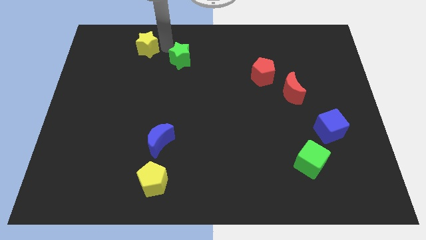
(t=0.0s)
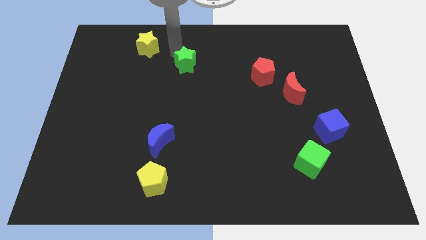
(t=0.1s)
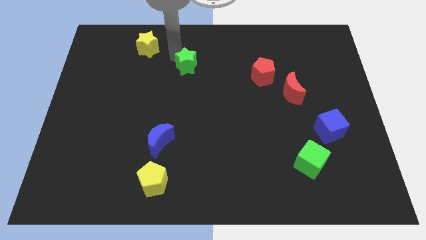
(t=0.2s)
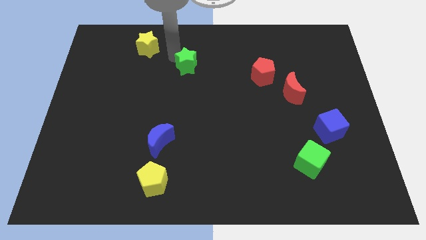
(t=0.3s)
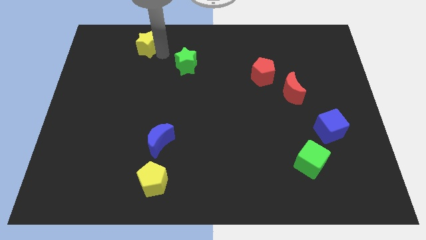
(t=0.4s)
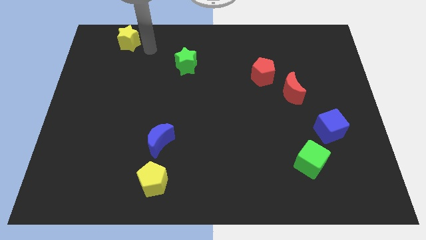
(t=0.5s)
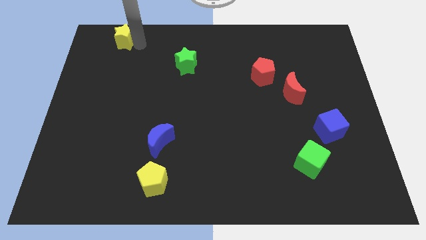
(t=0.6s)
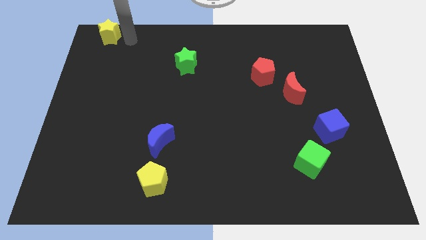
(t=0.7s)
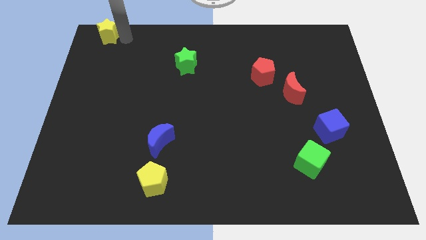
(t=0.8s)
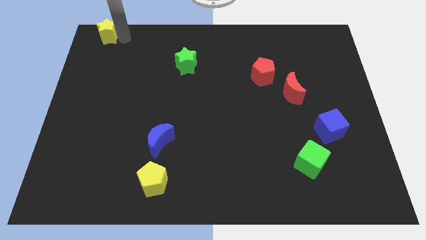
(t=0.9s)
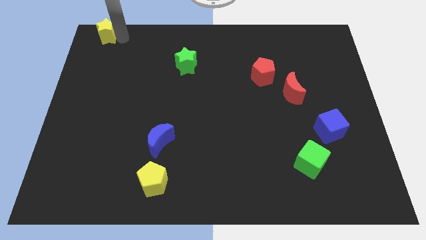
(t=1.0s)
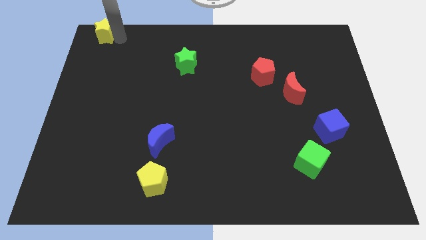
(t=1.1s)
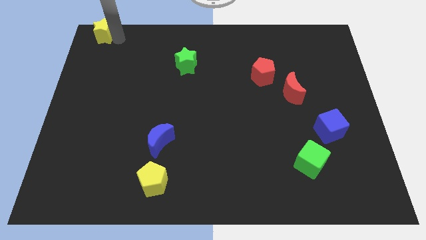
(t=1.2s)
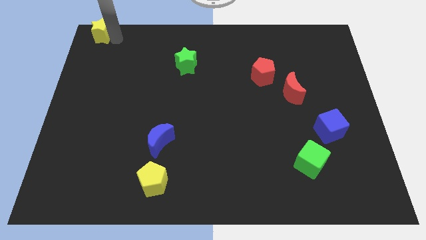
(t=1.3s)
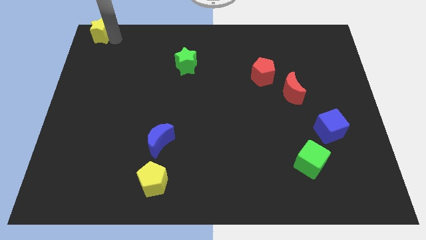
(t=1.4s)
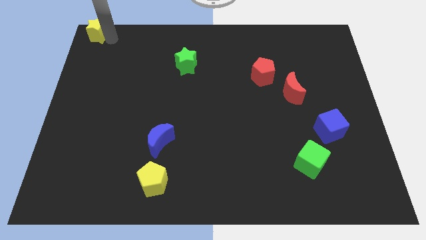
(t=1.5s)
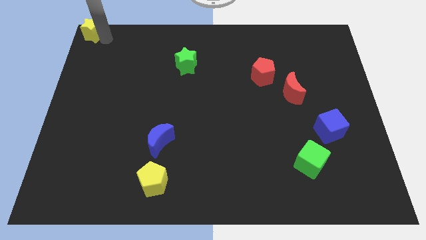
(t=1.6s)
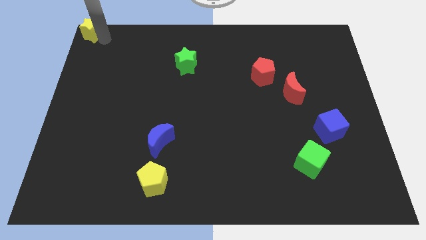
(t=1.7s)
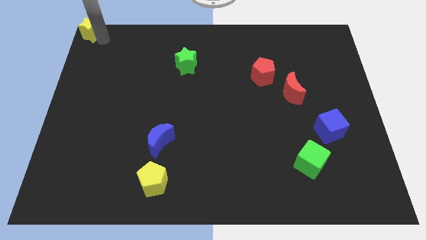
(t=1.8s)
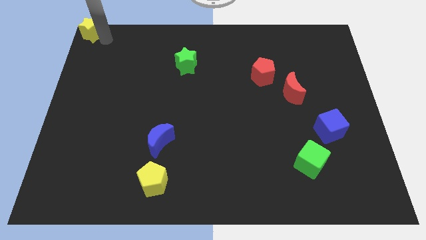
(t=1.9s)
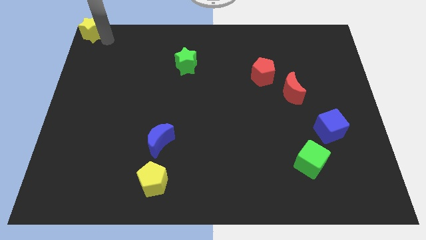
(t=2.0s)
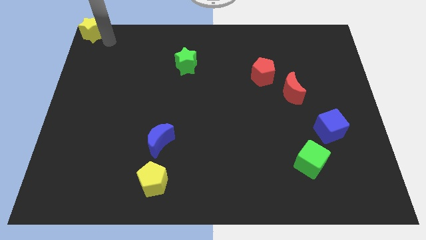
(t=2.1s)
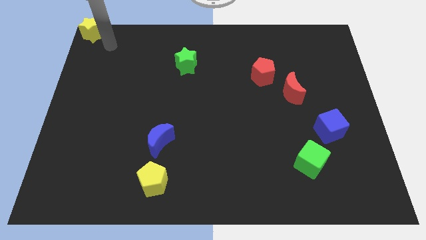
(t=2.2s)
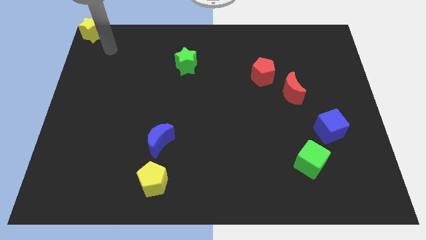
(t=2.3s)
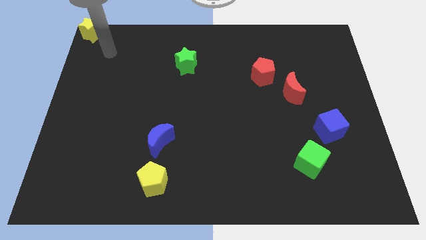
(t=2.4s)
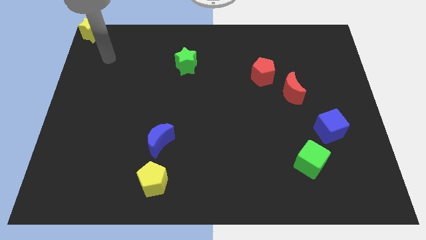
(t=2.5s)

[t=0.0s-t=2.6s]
separate the yellow star to the top left corner

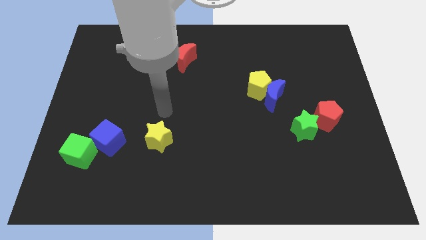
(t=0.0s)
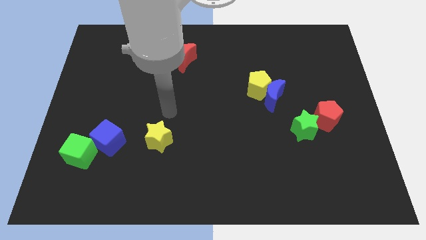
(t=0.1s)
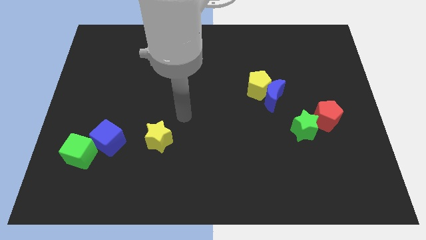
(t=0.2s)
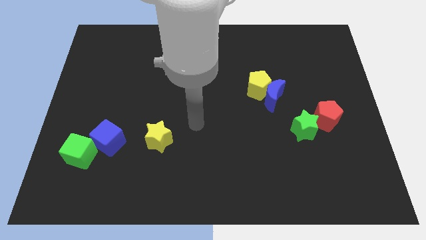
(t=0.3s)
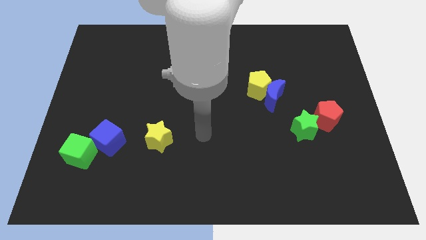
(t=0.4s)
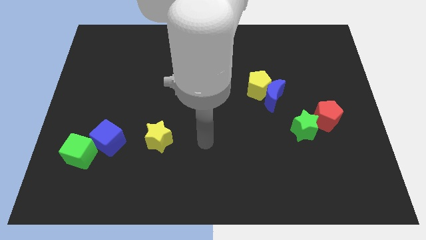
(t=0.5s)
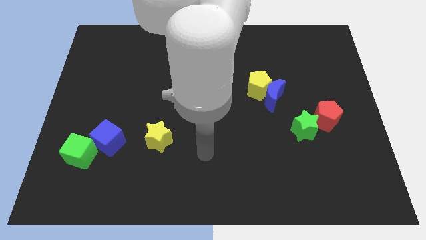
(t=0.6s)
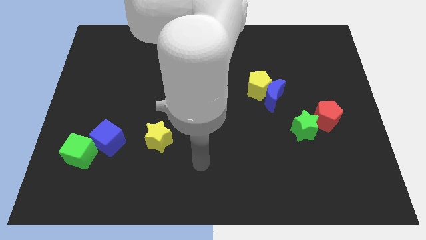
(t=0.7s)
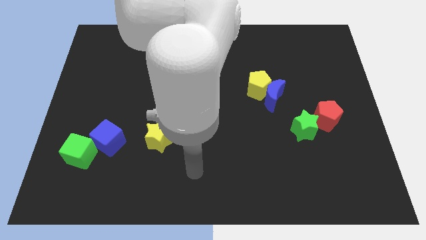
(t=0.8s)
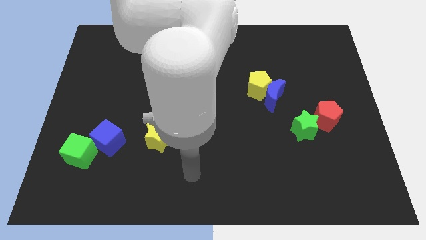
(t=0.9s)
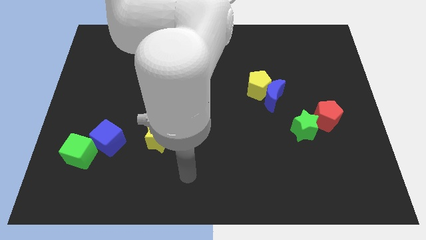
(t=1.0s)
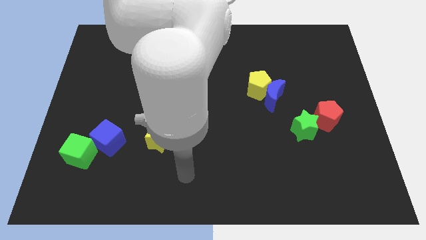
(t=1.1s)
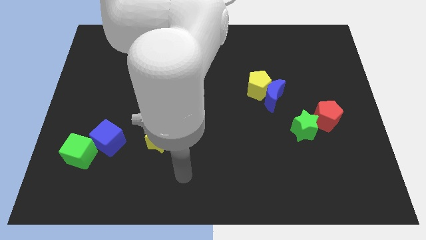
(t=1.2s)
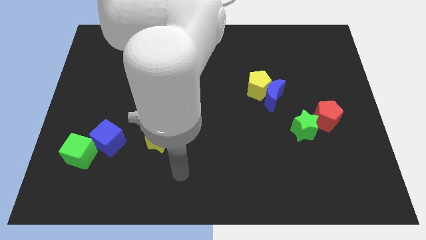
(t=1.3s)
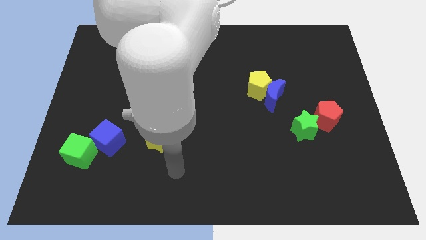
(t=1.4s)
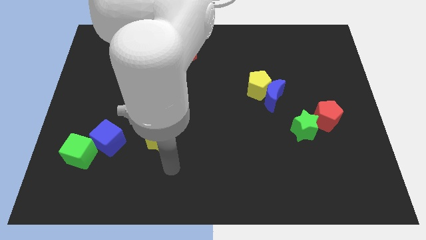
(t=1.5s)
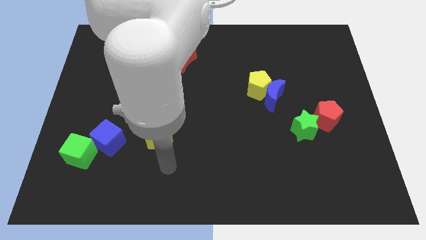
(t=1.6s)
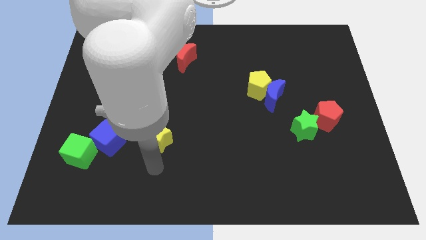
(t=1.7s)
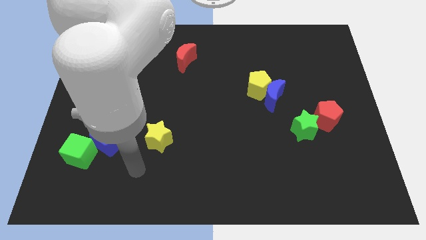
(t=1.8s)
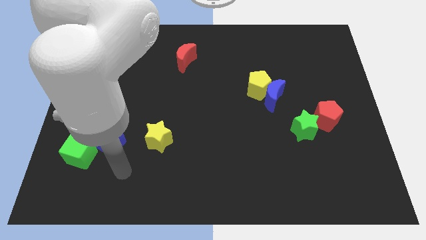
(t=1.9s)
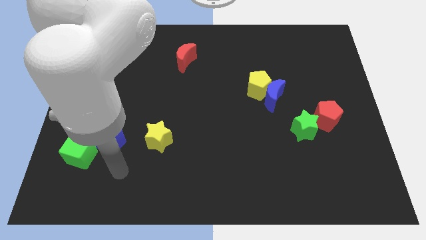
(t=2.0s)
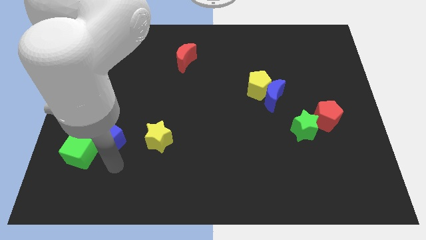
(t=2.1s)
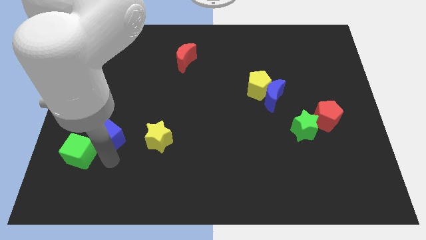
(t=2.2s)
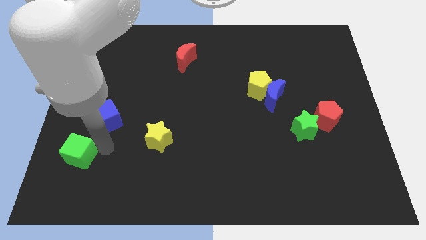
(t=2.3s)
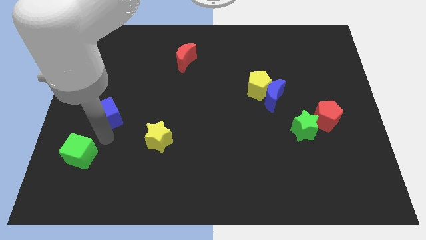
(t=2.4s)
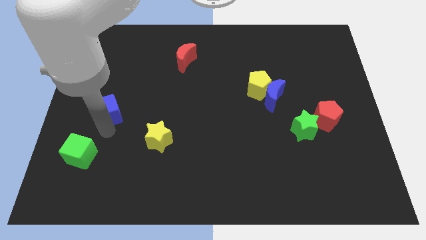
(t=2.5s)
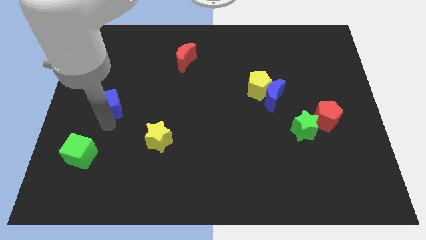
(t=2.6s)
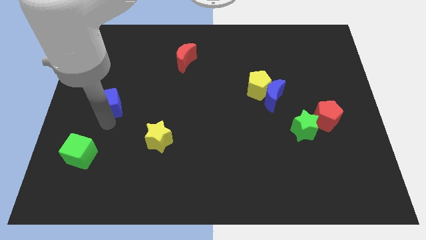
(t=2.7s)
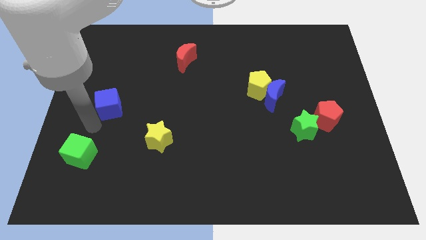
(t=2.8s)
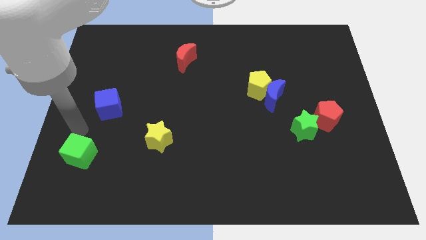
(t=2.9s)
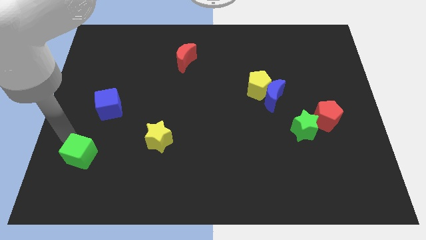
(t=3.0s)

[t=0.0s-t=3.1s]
separate blue cube from green cube

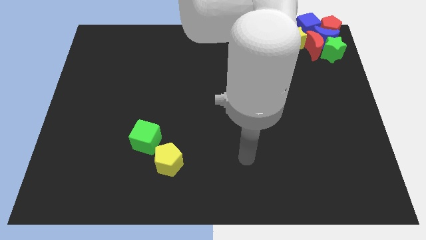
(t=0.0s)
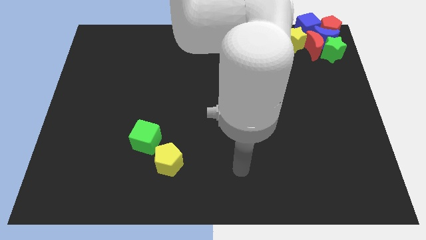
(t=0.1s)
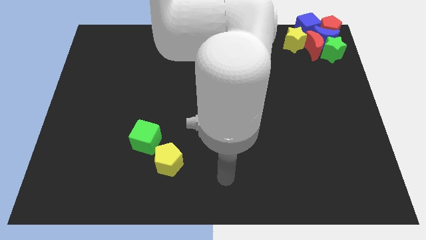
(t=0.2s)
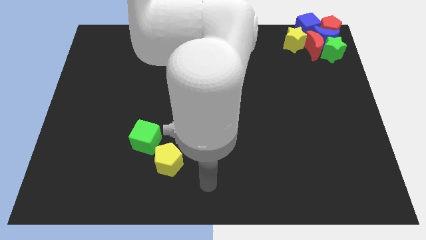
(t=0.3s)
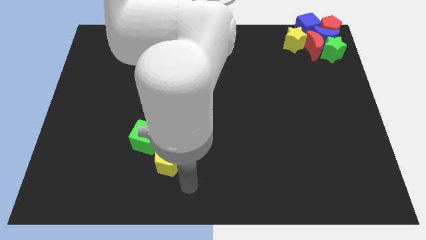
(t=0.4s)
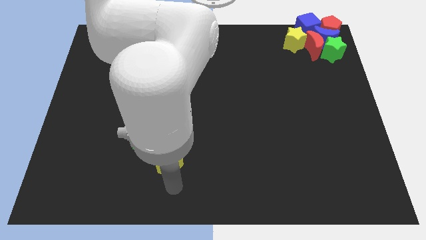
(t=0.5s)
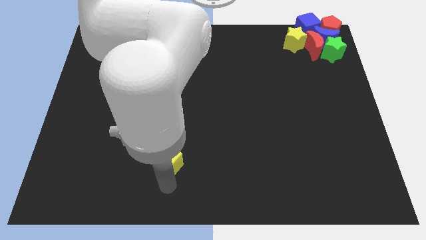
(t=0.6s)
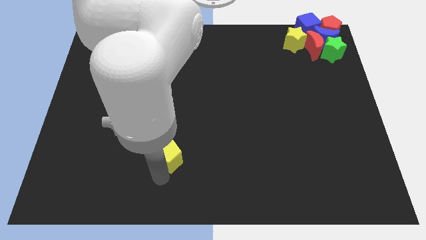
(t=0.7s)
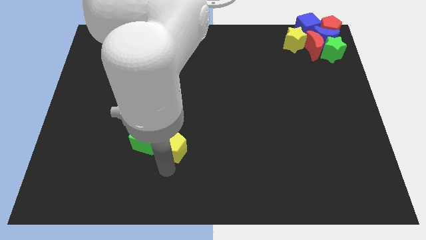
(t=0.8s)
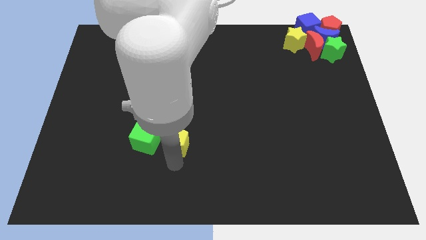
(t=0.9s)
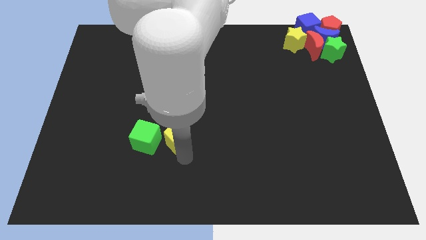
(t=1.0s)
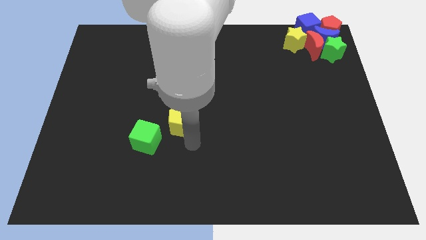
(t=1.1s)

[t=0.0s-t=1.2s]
push the yellow pentagon to the right of the green cube

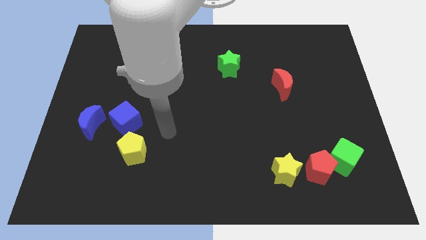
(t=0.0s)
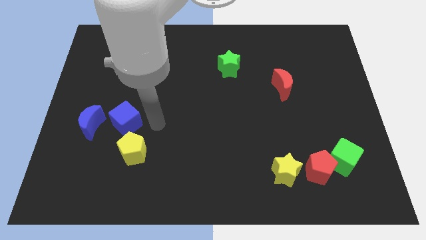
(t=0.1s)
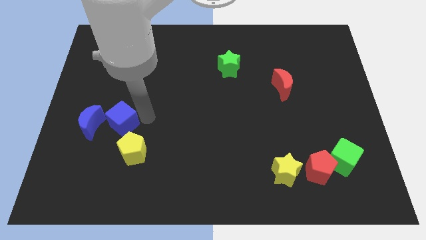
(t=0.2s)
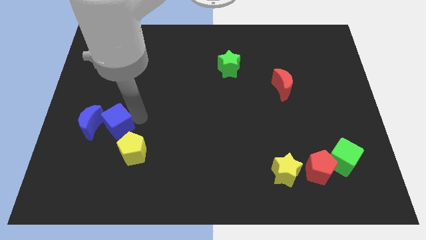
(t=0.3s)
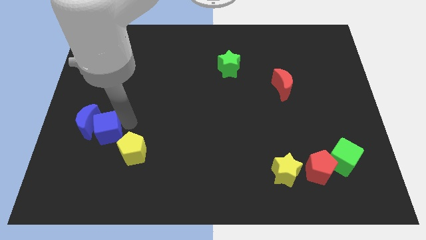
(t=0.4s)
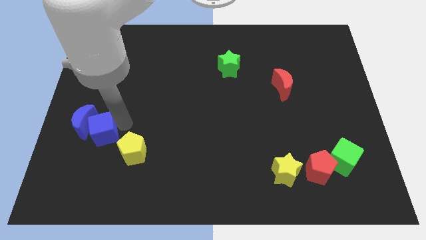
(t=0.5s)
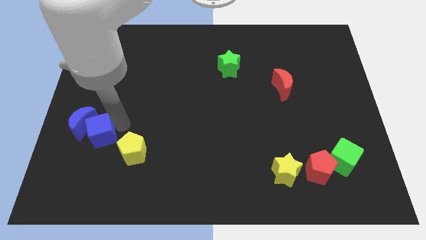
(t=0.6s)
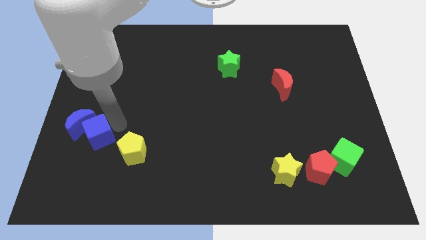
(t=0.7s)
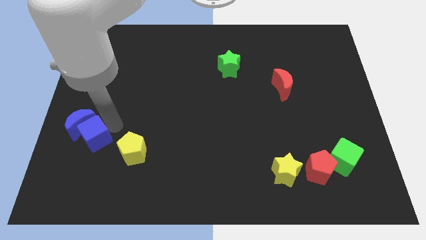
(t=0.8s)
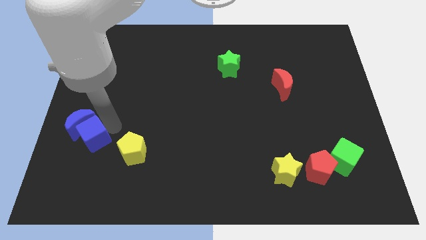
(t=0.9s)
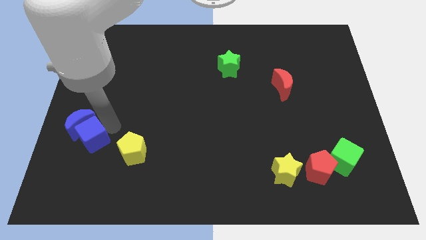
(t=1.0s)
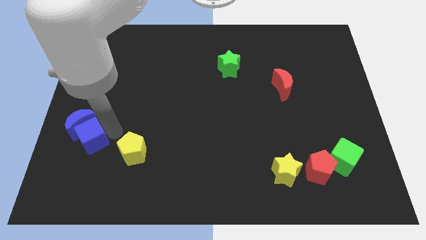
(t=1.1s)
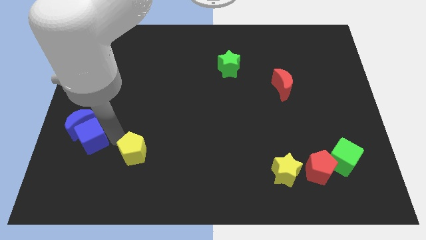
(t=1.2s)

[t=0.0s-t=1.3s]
move the blue cube into the blue crescent

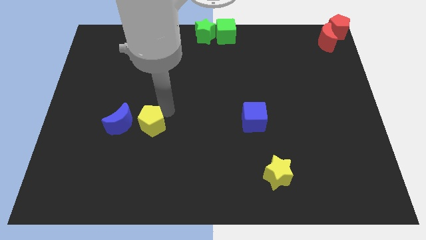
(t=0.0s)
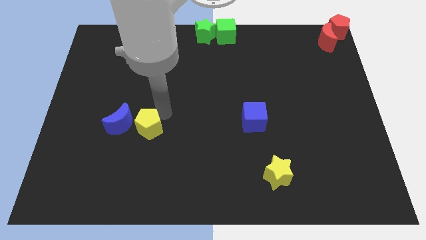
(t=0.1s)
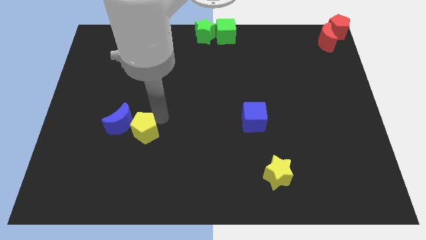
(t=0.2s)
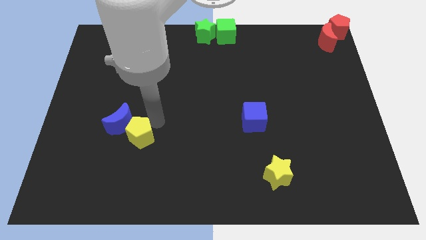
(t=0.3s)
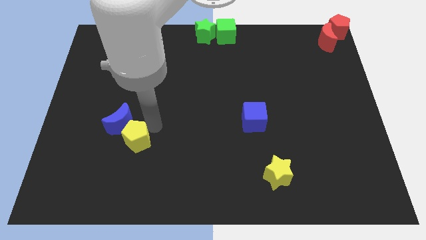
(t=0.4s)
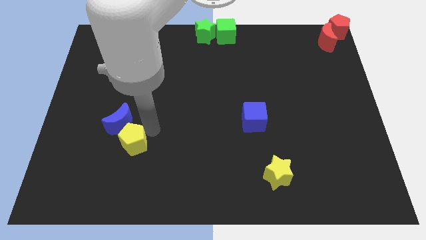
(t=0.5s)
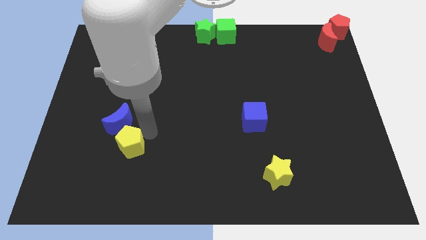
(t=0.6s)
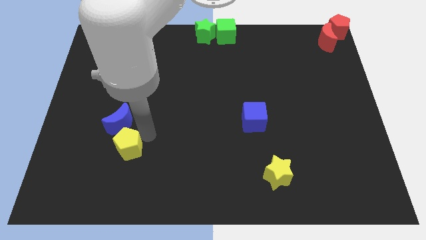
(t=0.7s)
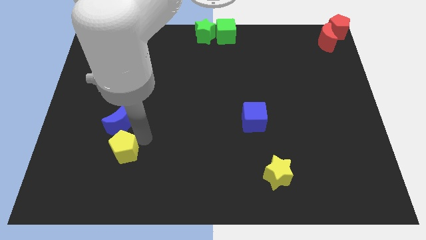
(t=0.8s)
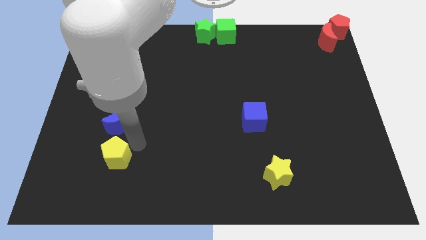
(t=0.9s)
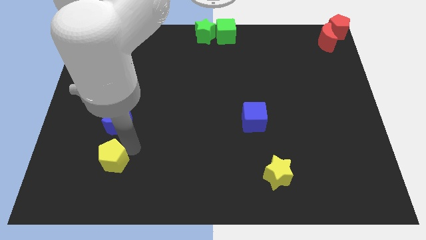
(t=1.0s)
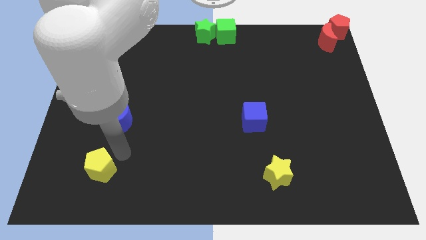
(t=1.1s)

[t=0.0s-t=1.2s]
push the yellow pentagon slightly downwards
